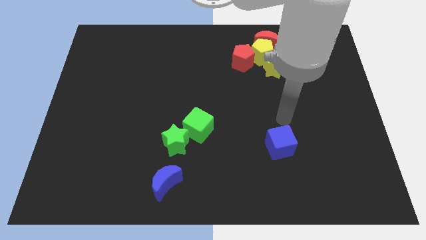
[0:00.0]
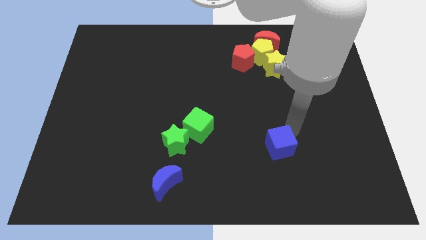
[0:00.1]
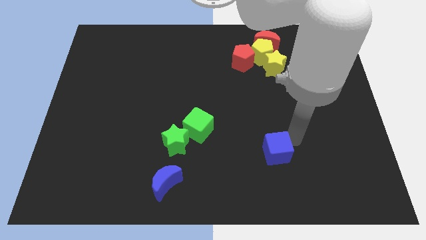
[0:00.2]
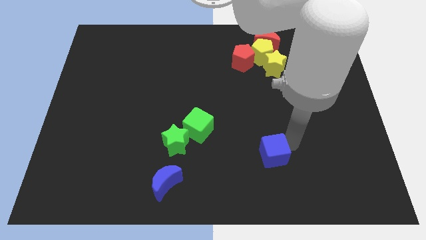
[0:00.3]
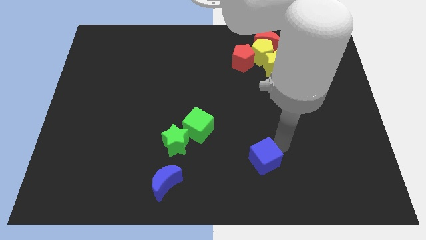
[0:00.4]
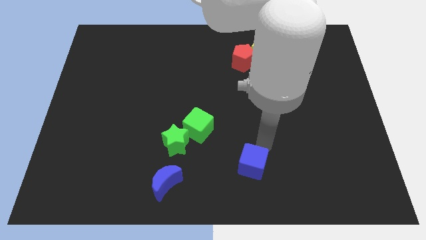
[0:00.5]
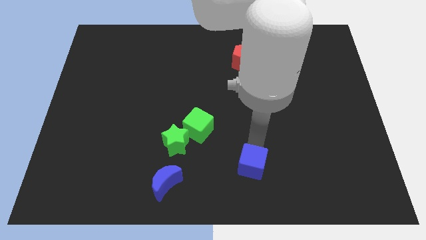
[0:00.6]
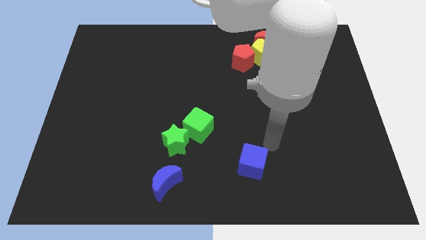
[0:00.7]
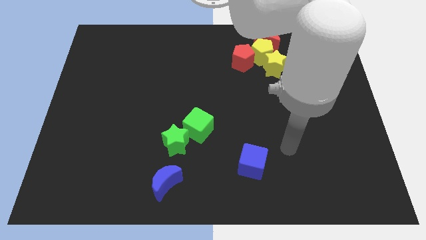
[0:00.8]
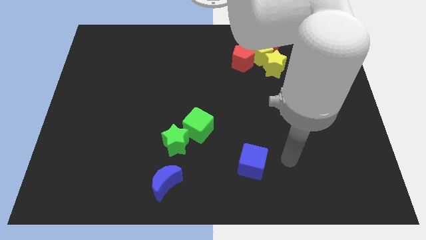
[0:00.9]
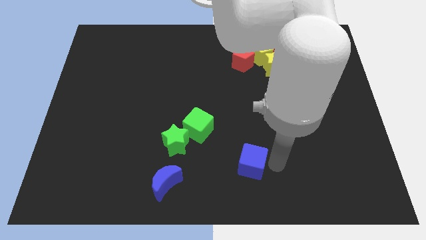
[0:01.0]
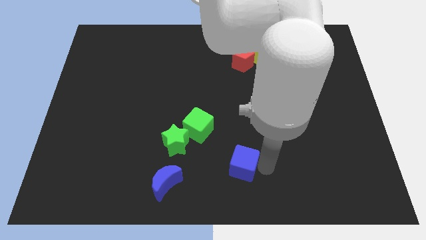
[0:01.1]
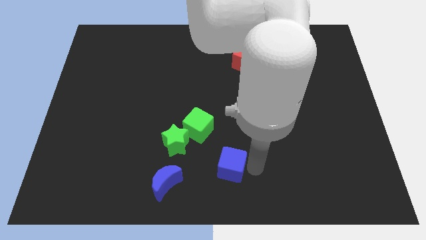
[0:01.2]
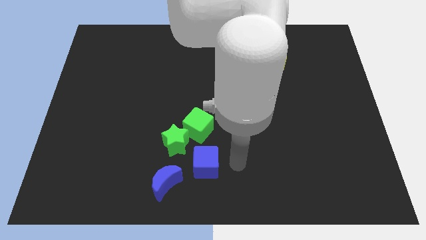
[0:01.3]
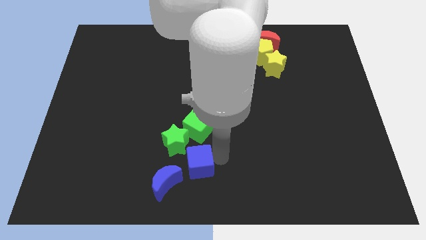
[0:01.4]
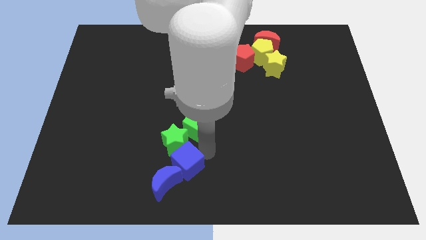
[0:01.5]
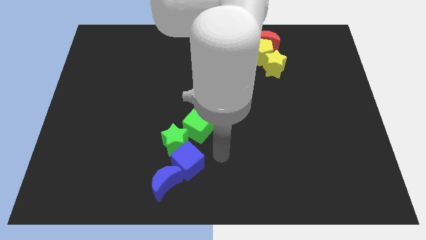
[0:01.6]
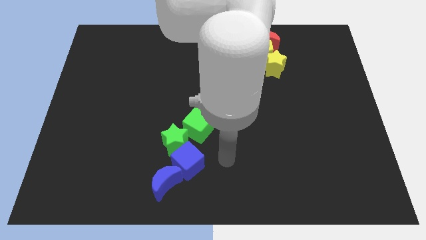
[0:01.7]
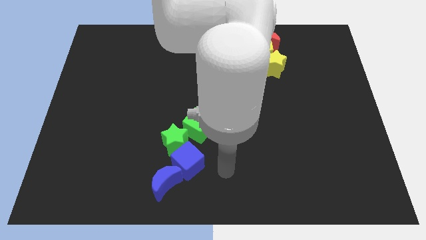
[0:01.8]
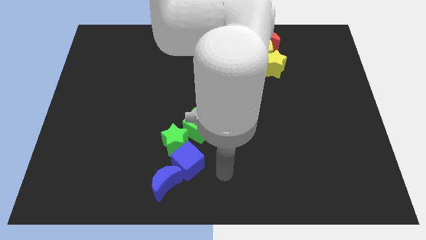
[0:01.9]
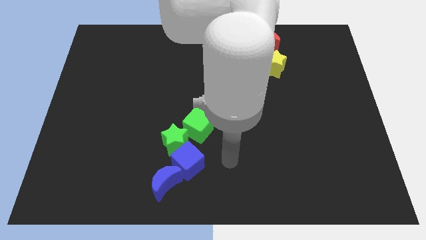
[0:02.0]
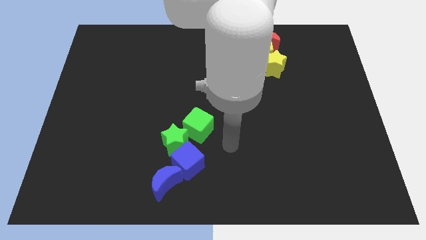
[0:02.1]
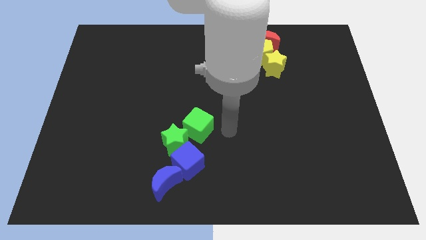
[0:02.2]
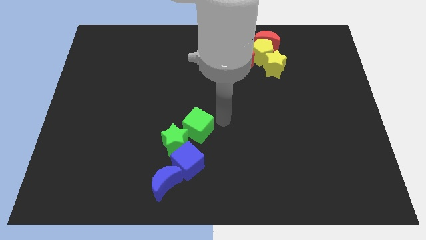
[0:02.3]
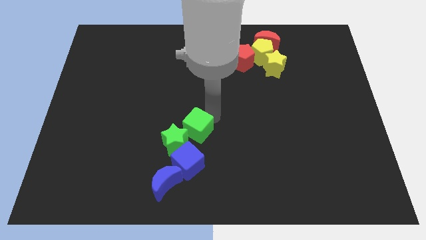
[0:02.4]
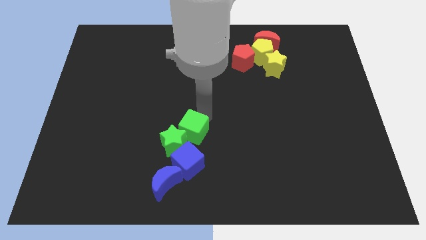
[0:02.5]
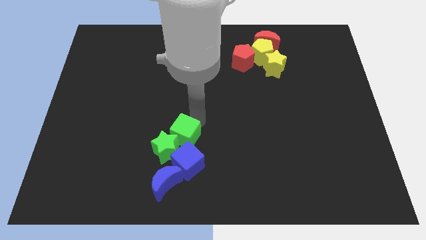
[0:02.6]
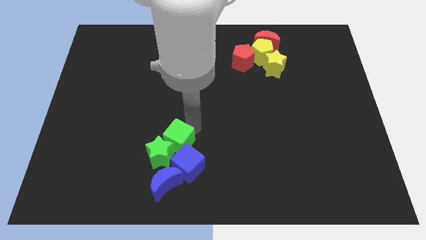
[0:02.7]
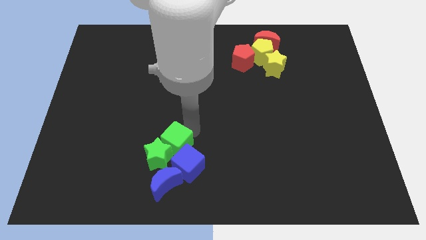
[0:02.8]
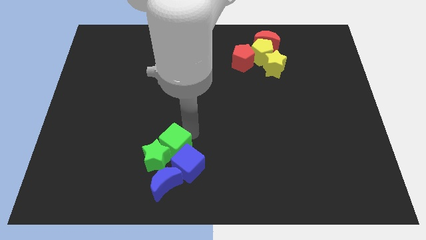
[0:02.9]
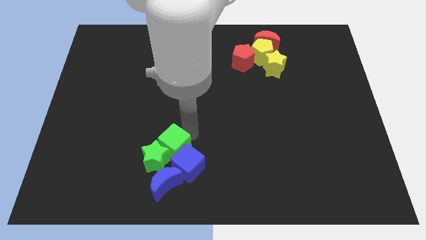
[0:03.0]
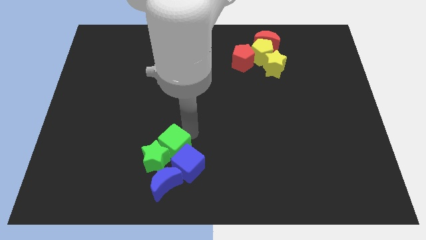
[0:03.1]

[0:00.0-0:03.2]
place the blue and green blocks together

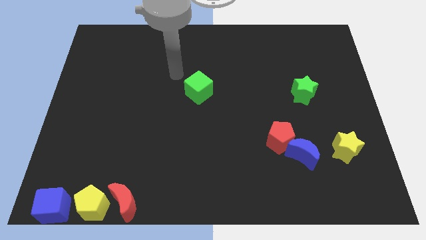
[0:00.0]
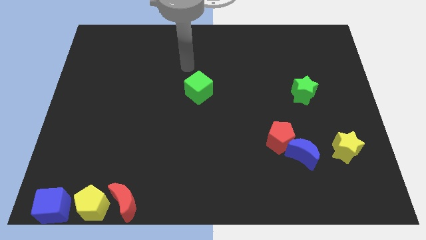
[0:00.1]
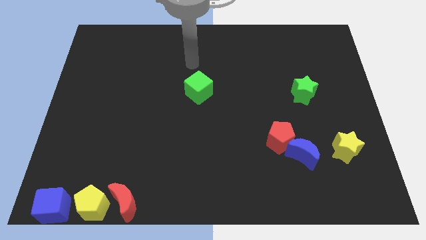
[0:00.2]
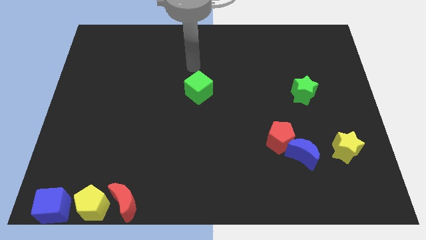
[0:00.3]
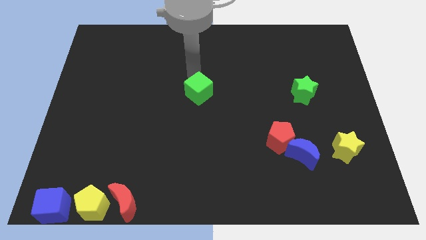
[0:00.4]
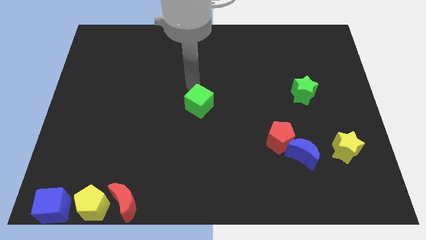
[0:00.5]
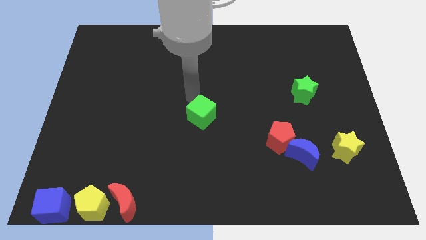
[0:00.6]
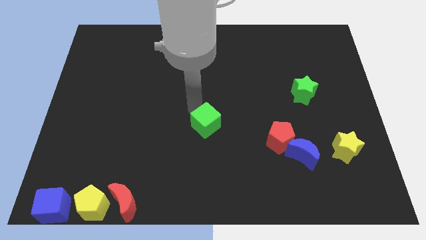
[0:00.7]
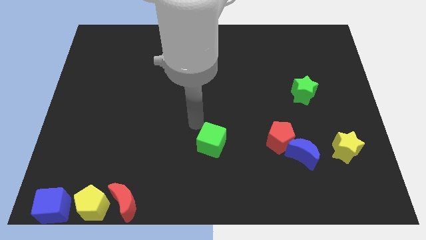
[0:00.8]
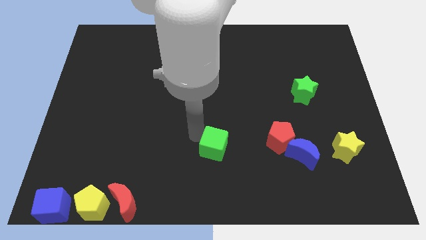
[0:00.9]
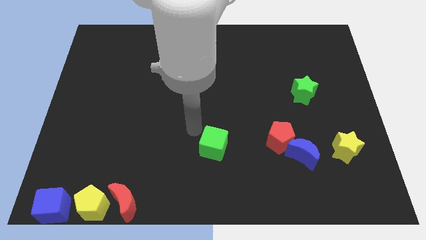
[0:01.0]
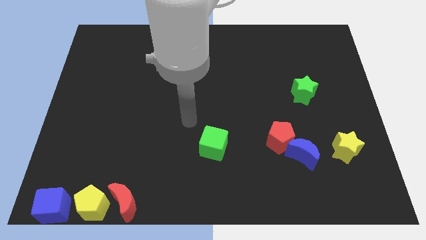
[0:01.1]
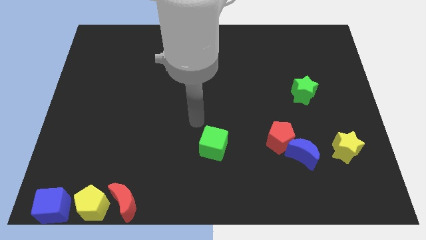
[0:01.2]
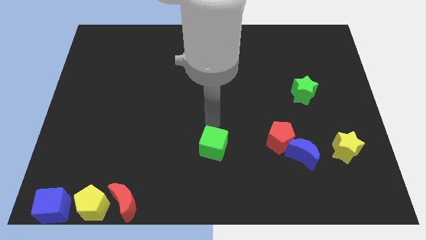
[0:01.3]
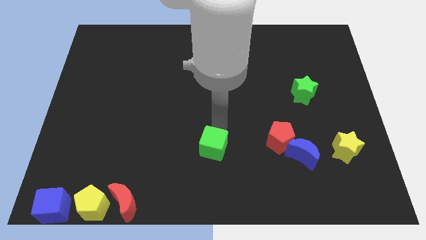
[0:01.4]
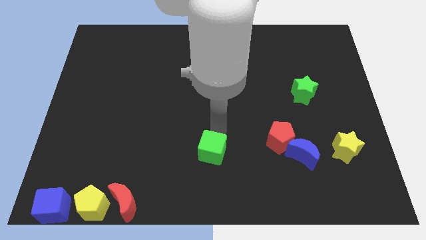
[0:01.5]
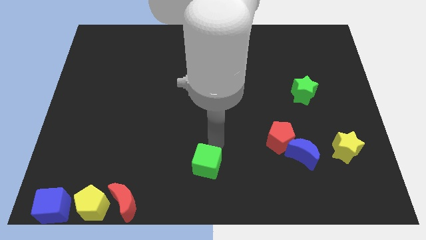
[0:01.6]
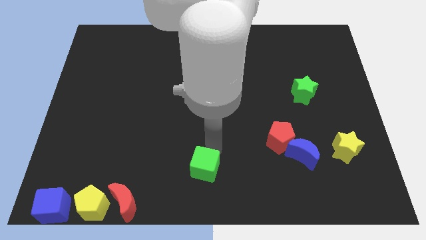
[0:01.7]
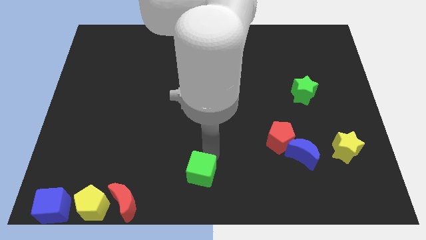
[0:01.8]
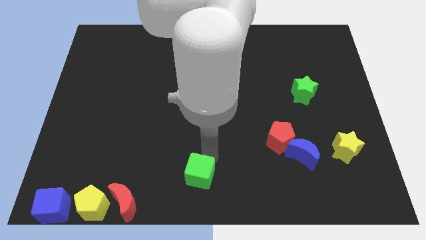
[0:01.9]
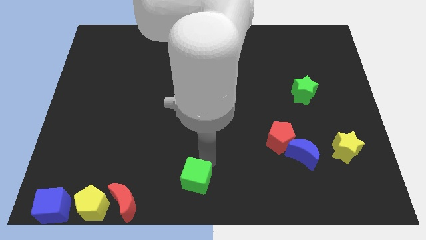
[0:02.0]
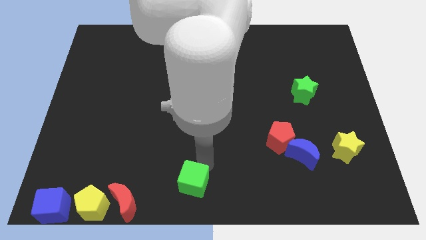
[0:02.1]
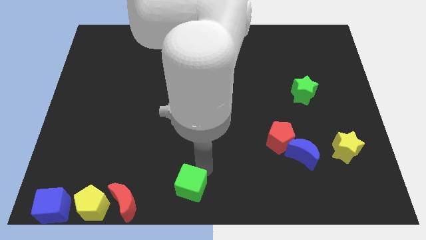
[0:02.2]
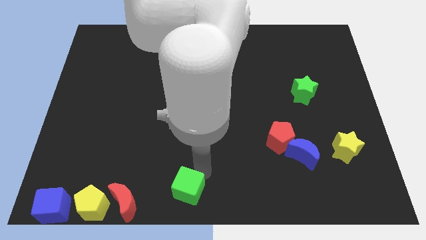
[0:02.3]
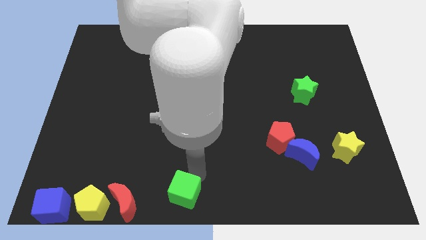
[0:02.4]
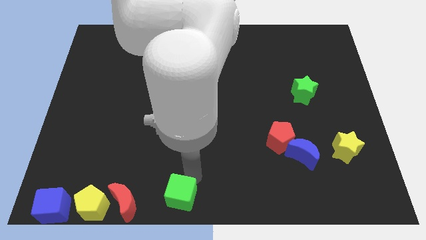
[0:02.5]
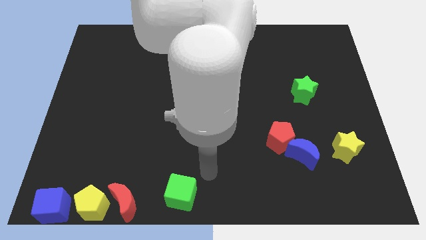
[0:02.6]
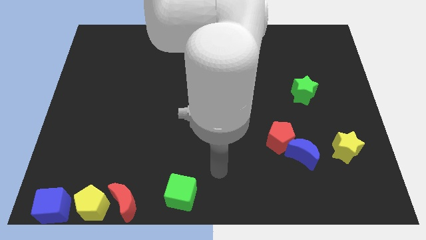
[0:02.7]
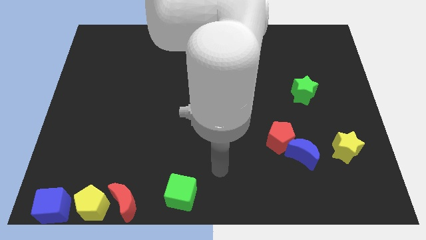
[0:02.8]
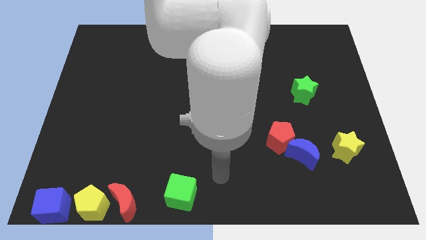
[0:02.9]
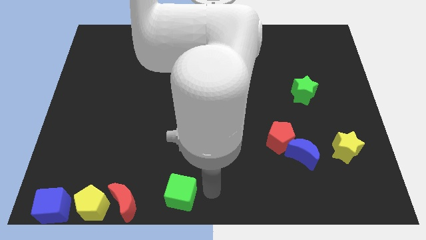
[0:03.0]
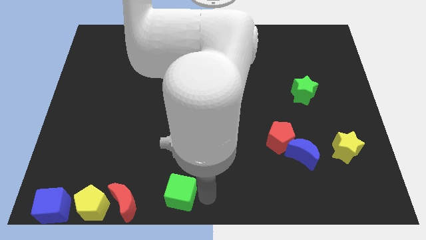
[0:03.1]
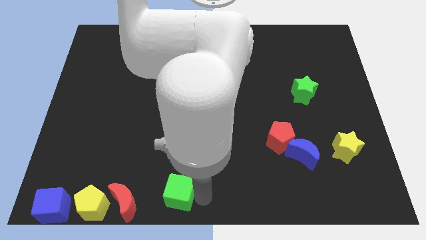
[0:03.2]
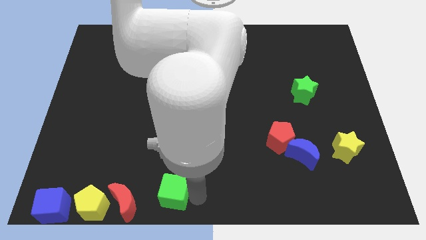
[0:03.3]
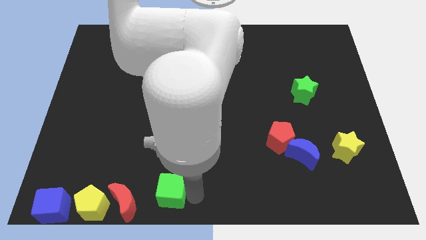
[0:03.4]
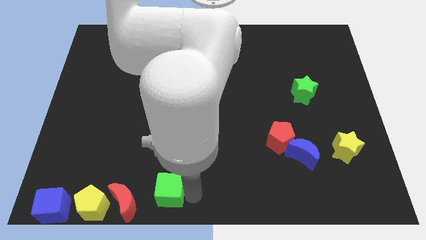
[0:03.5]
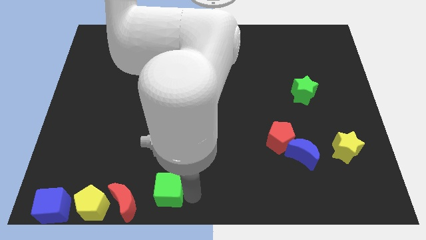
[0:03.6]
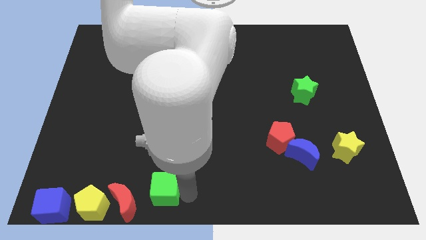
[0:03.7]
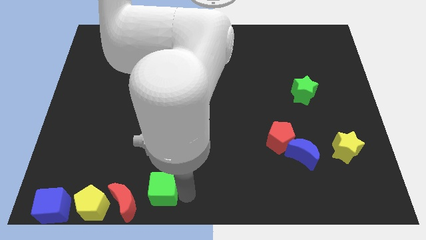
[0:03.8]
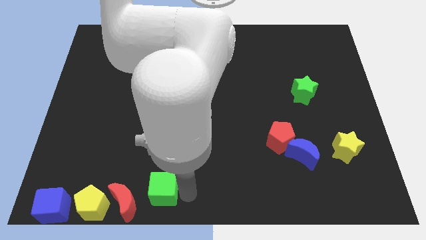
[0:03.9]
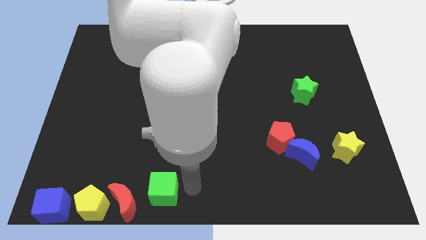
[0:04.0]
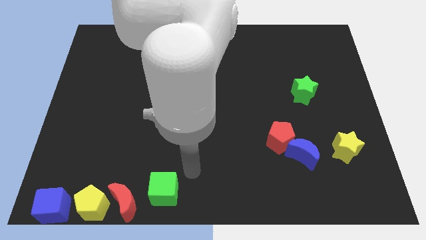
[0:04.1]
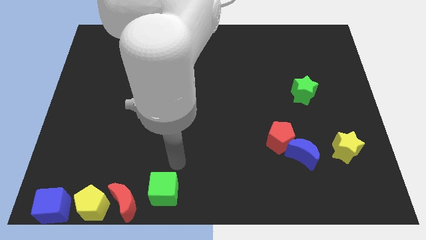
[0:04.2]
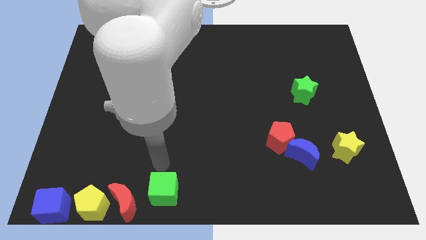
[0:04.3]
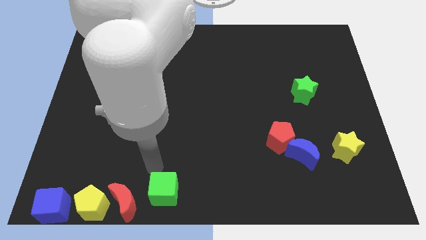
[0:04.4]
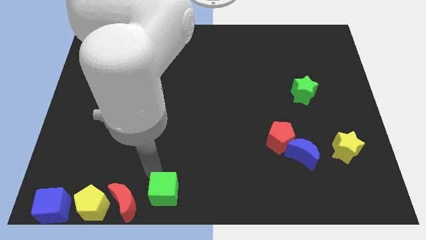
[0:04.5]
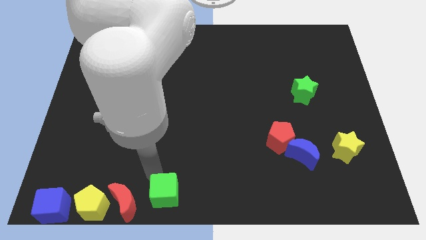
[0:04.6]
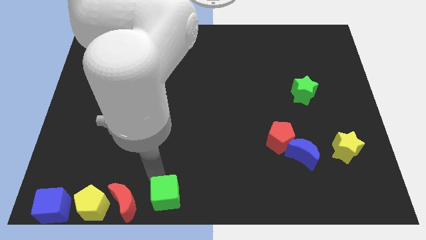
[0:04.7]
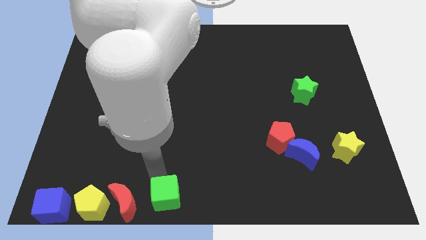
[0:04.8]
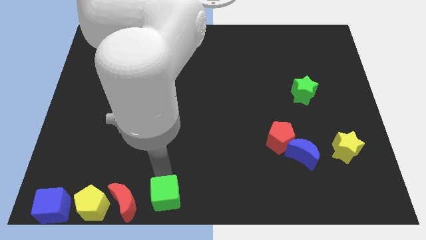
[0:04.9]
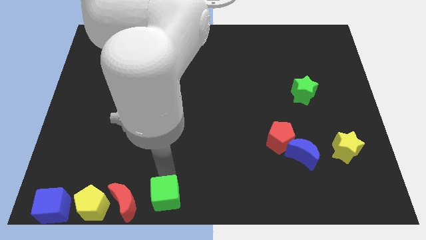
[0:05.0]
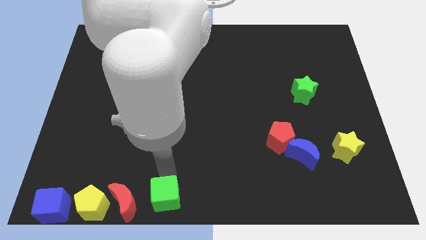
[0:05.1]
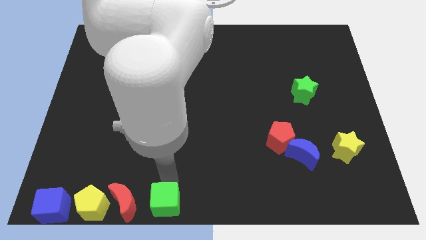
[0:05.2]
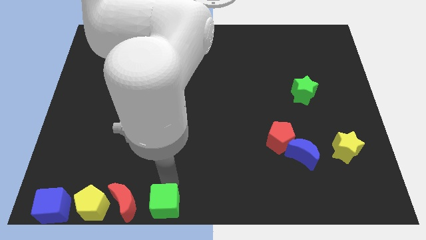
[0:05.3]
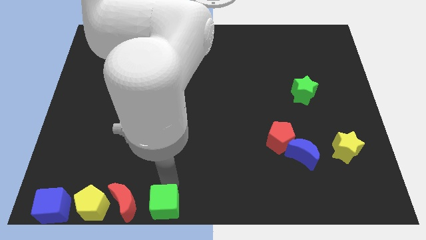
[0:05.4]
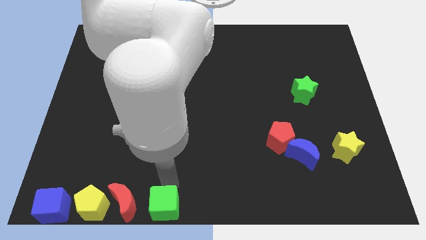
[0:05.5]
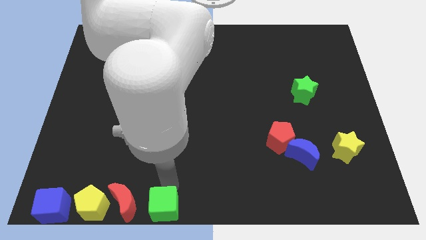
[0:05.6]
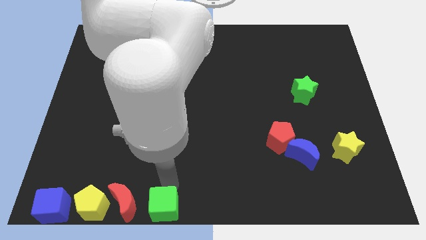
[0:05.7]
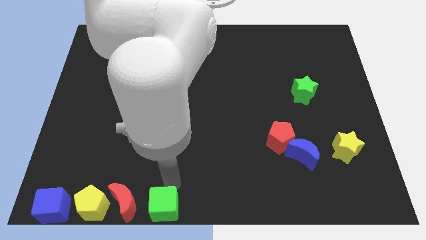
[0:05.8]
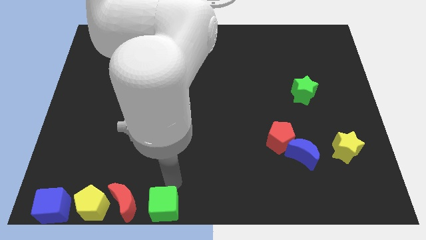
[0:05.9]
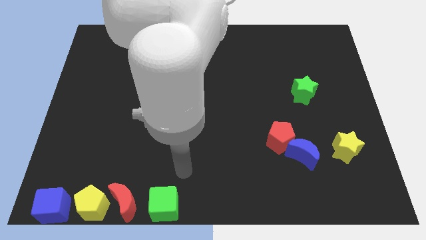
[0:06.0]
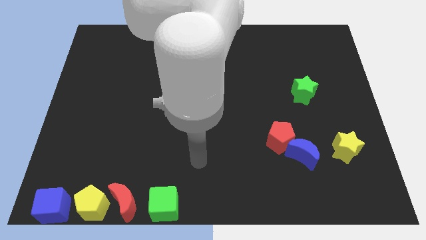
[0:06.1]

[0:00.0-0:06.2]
move the green cube to the right side of red moon
